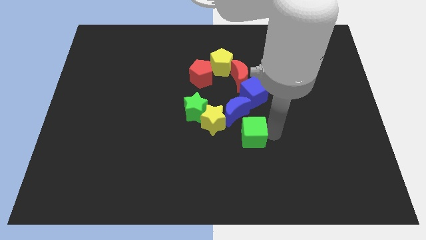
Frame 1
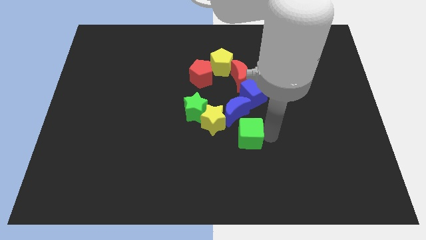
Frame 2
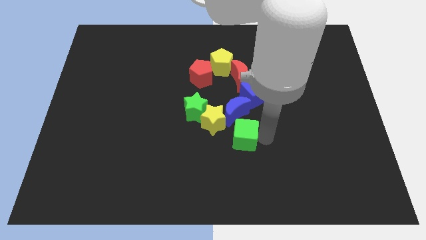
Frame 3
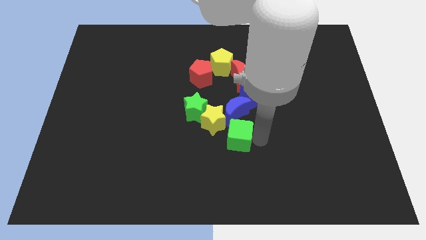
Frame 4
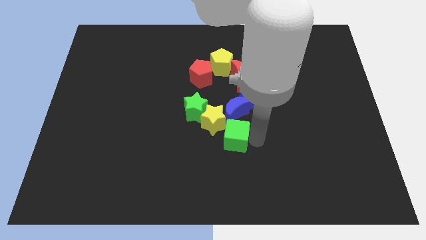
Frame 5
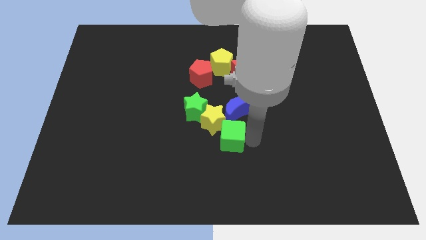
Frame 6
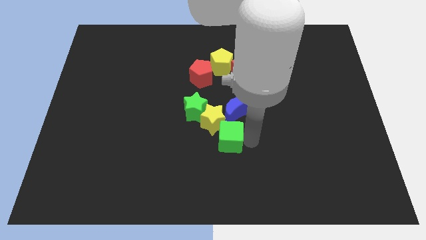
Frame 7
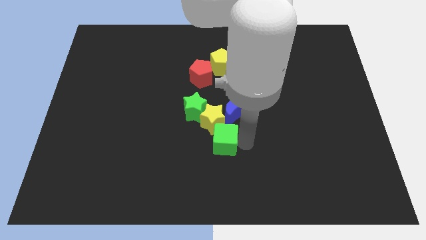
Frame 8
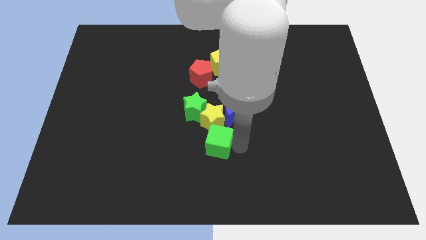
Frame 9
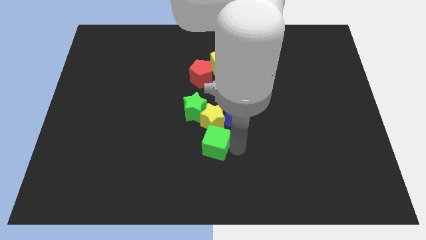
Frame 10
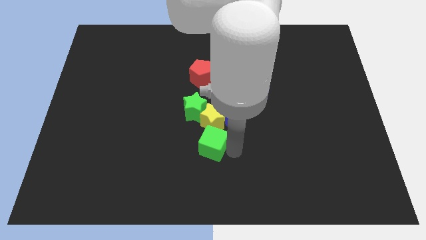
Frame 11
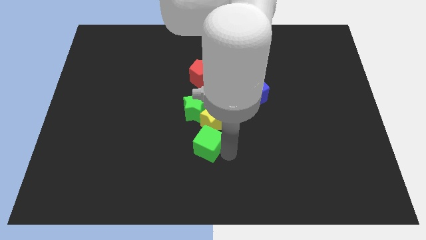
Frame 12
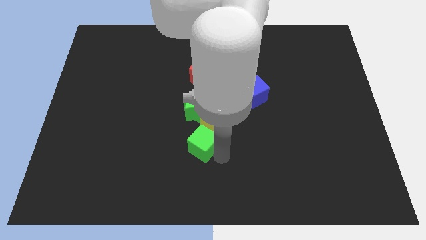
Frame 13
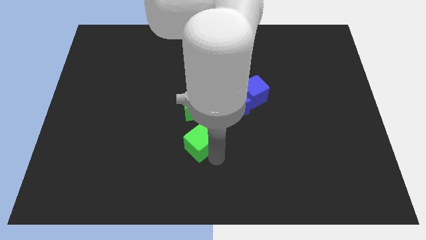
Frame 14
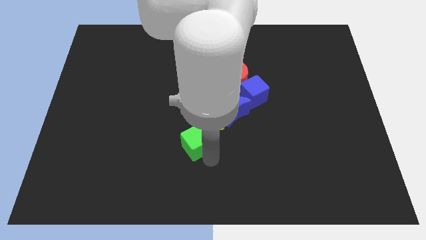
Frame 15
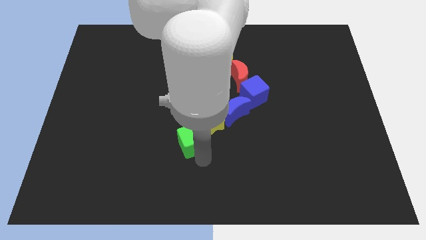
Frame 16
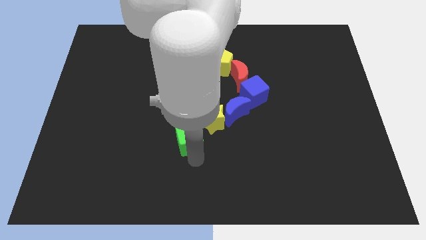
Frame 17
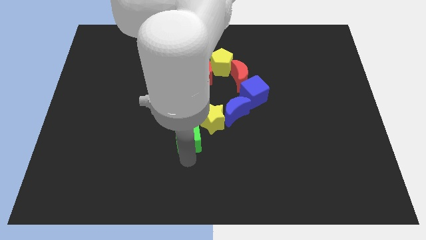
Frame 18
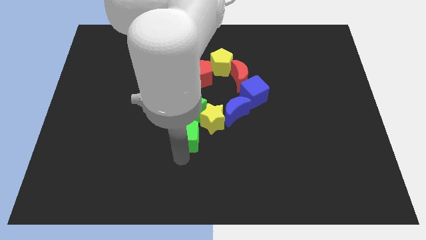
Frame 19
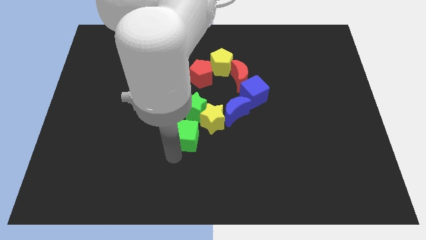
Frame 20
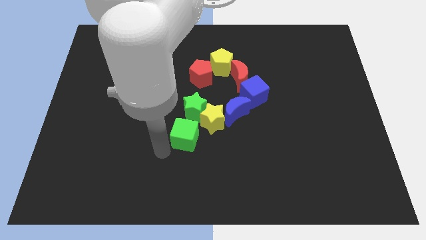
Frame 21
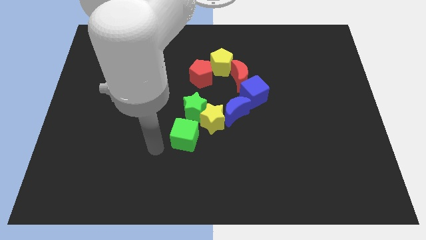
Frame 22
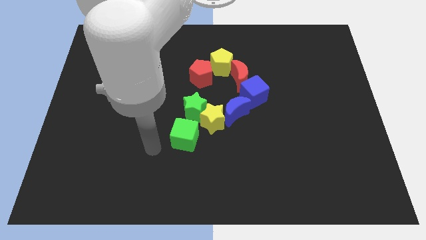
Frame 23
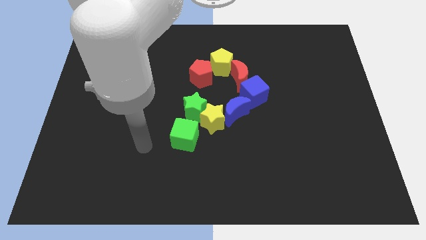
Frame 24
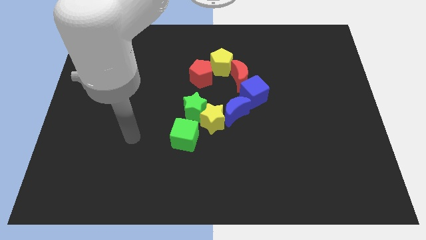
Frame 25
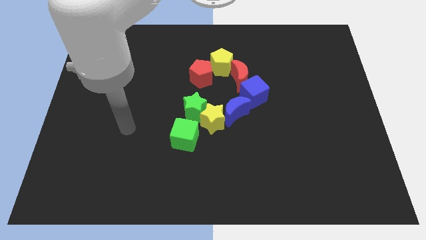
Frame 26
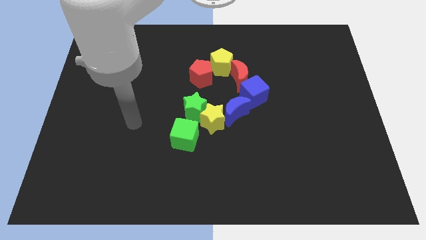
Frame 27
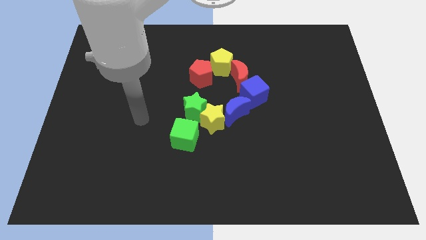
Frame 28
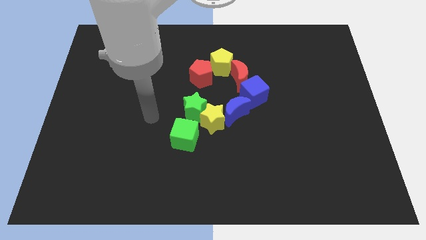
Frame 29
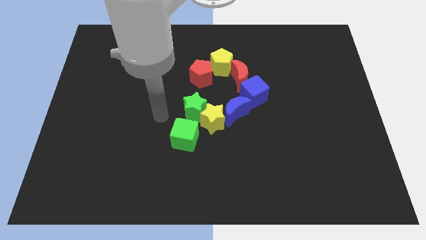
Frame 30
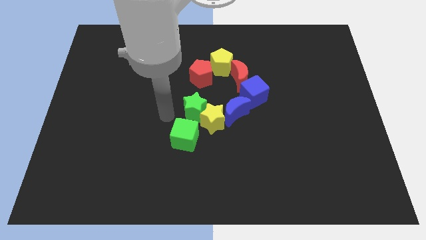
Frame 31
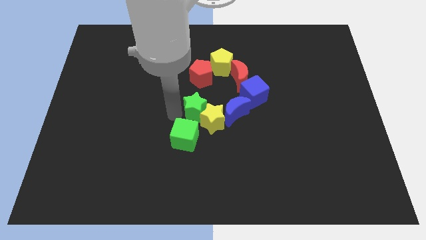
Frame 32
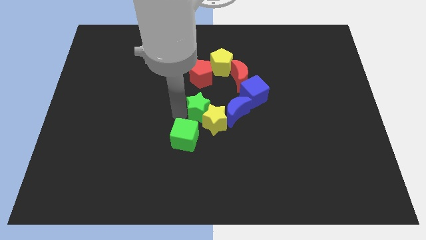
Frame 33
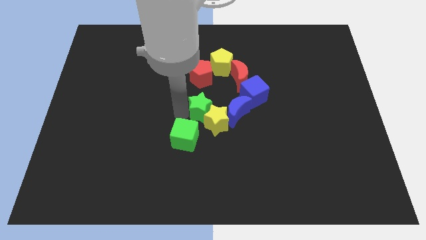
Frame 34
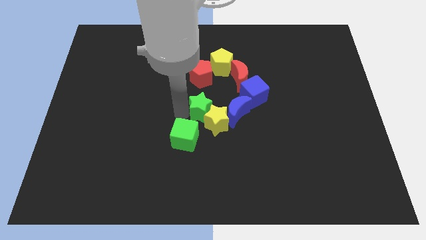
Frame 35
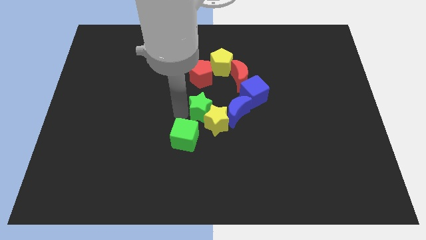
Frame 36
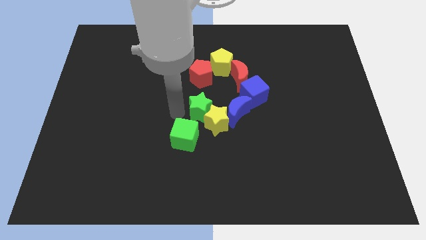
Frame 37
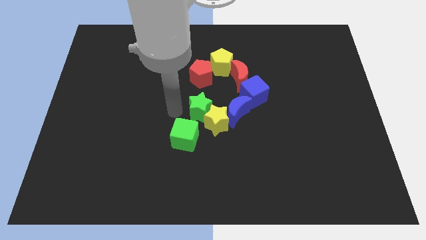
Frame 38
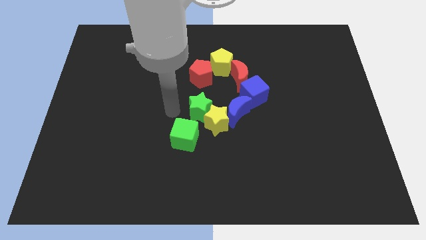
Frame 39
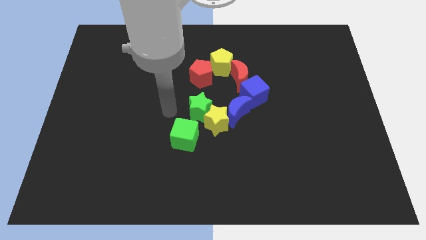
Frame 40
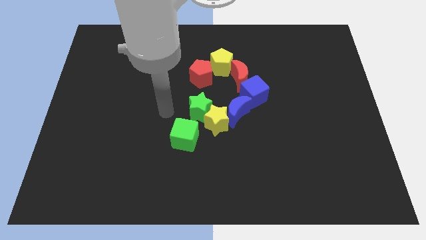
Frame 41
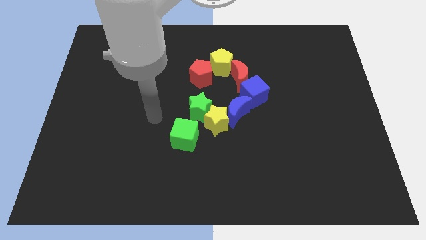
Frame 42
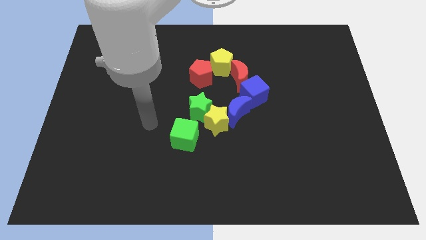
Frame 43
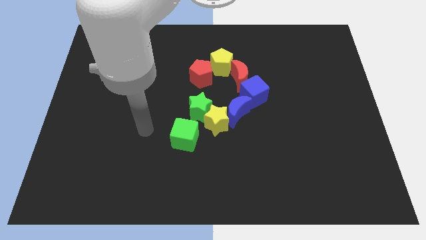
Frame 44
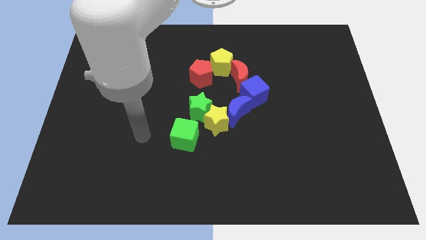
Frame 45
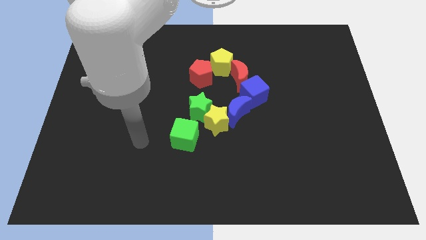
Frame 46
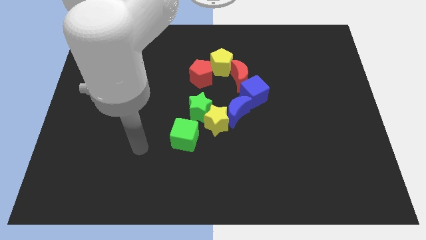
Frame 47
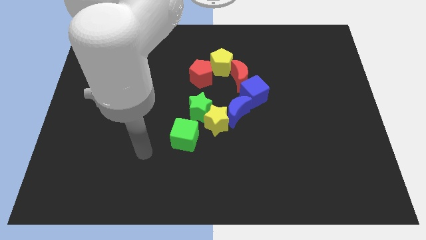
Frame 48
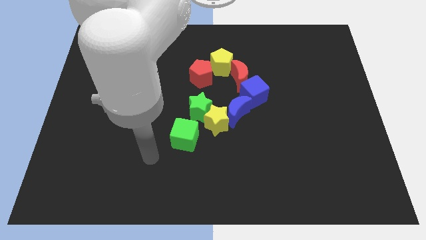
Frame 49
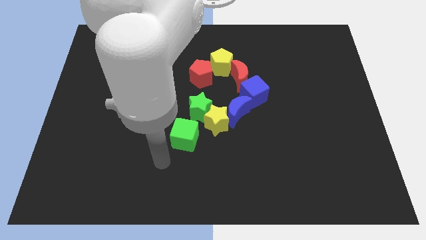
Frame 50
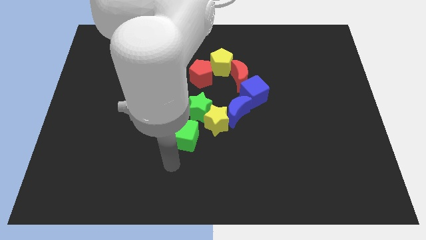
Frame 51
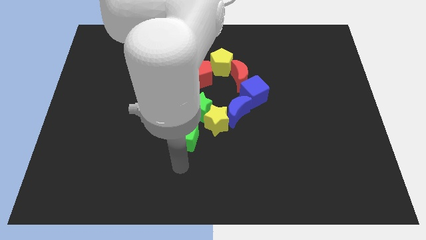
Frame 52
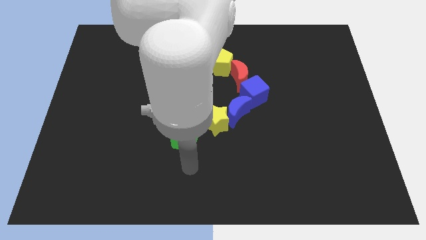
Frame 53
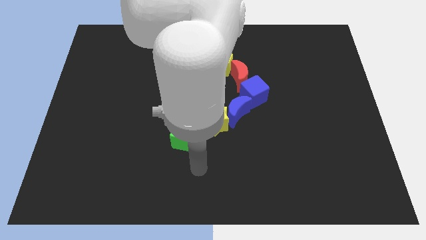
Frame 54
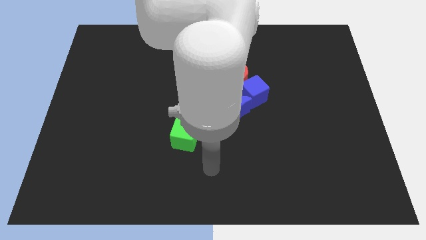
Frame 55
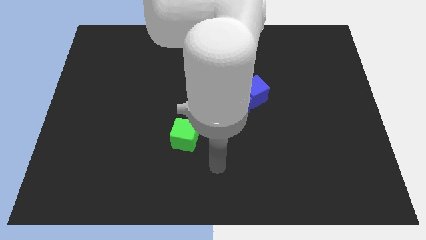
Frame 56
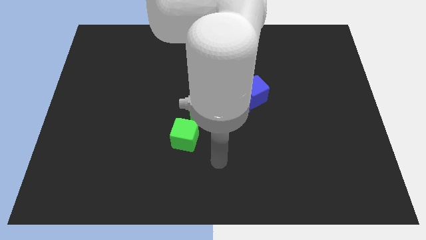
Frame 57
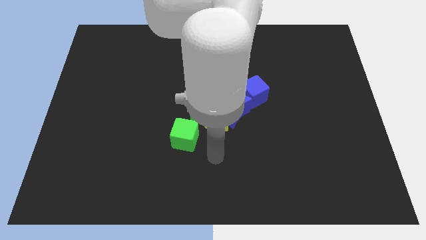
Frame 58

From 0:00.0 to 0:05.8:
place the green cube below the green star

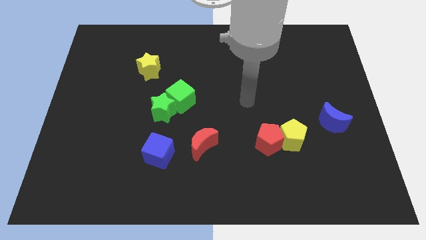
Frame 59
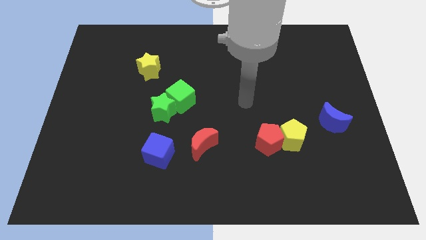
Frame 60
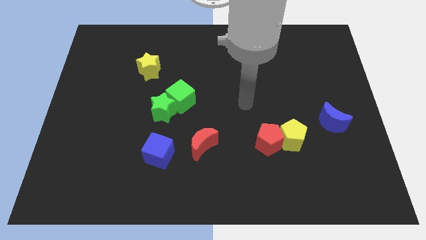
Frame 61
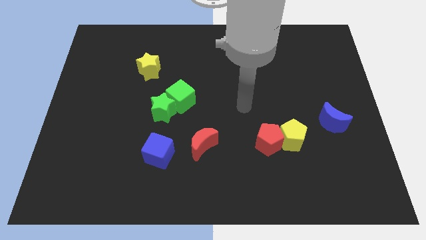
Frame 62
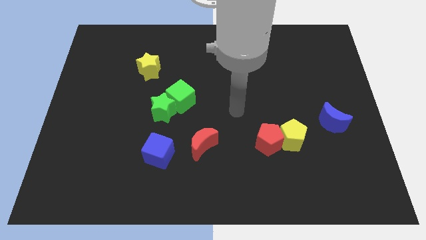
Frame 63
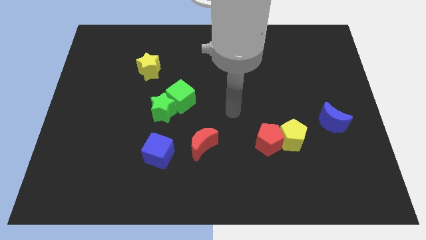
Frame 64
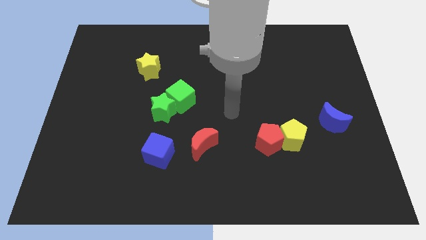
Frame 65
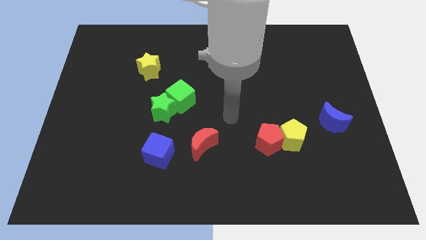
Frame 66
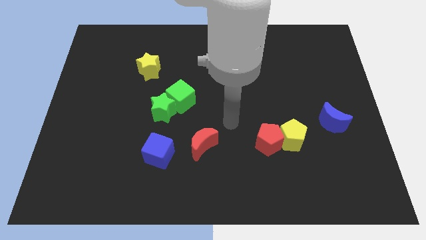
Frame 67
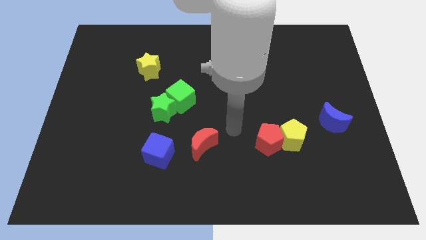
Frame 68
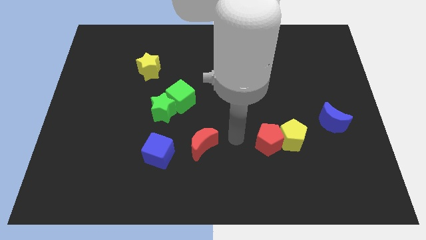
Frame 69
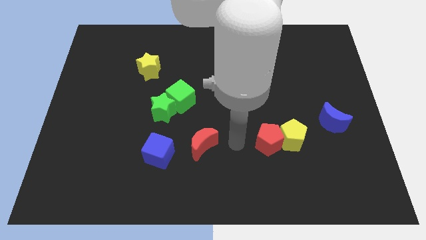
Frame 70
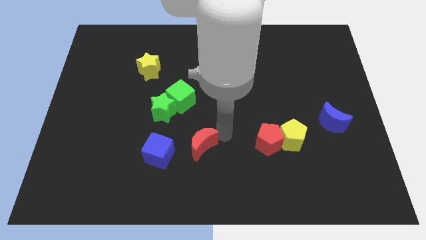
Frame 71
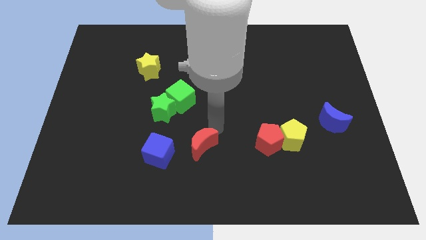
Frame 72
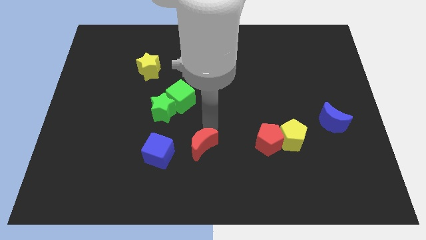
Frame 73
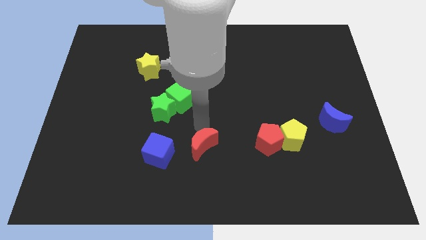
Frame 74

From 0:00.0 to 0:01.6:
point your arm at the top side of the red crescent

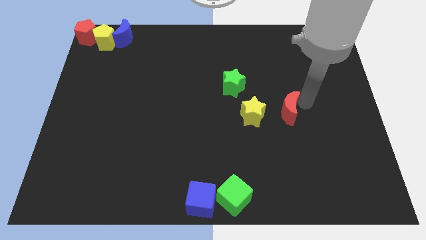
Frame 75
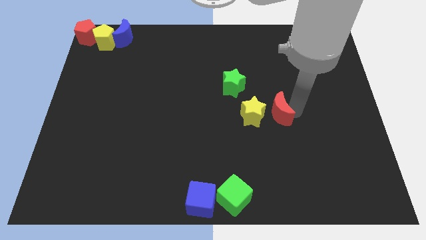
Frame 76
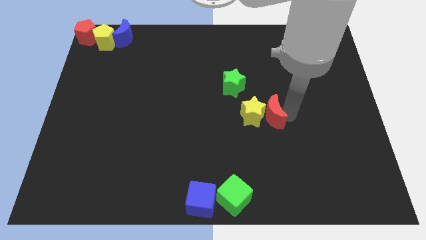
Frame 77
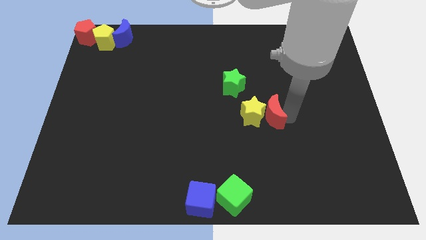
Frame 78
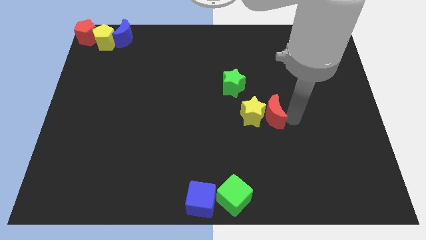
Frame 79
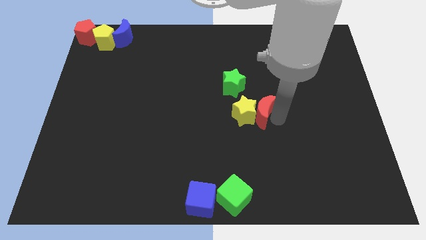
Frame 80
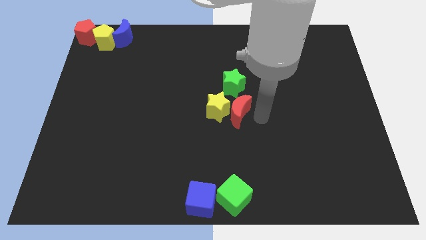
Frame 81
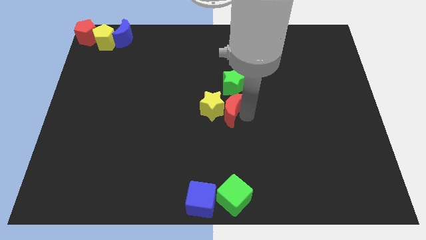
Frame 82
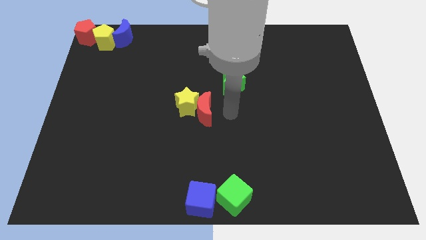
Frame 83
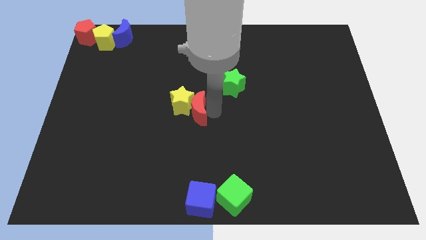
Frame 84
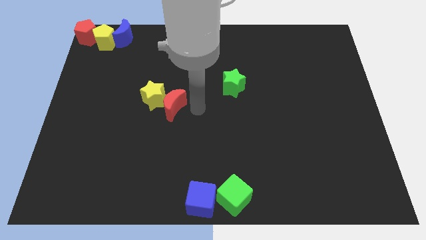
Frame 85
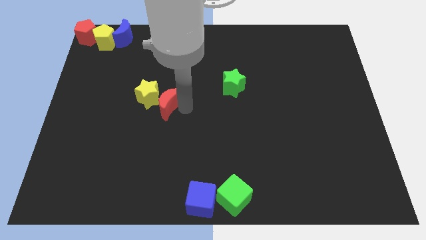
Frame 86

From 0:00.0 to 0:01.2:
push the red crescent into the yellow star

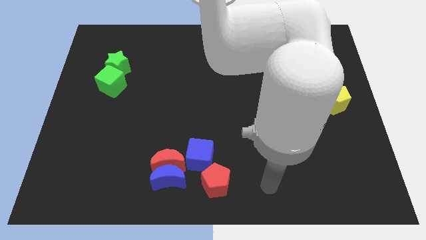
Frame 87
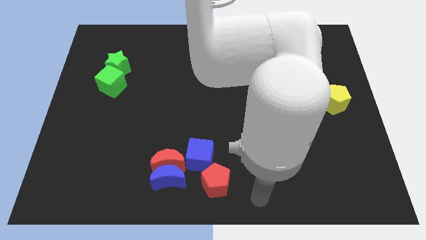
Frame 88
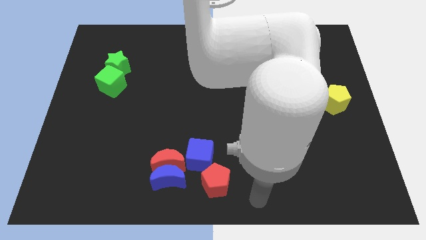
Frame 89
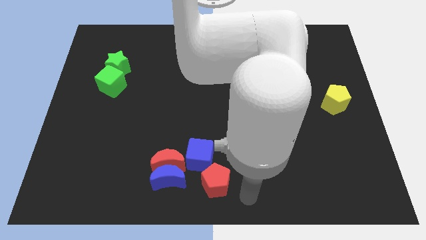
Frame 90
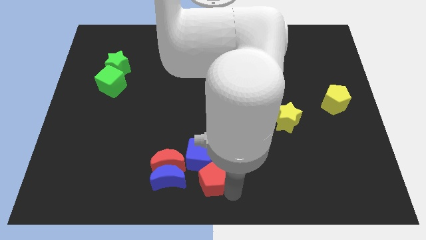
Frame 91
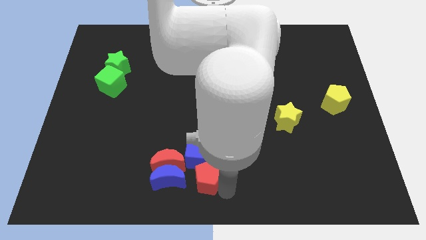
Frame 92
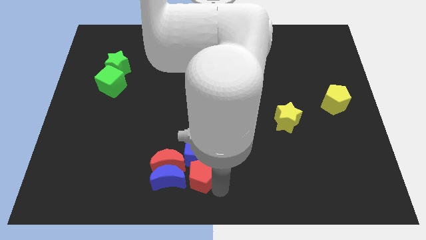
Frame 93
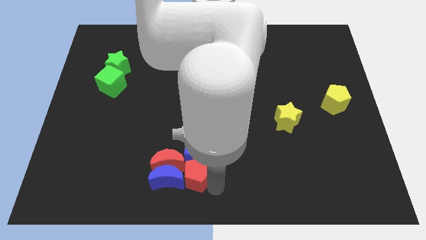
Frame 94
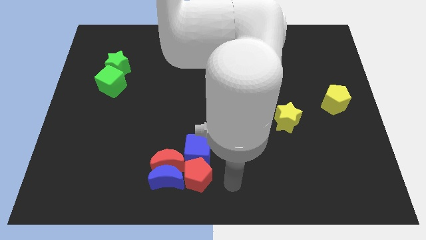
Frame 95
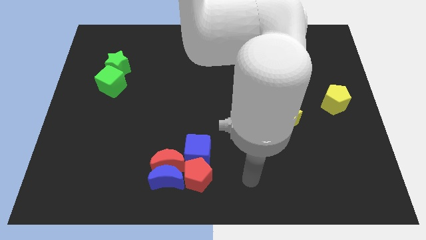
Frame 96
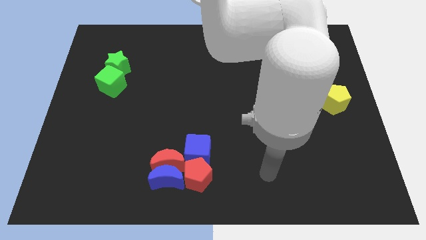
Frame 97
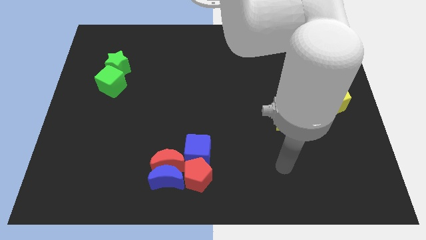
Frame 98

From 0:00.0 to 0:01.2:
push the red pentagon into the group of blocks
